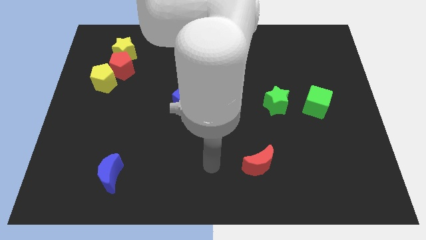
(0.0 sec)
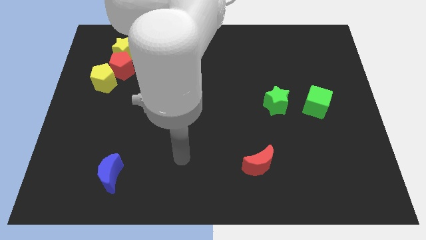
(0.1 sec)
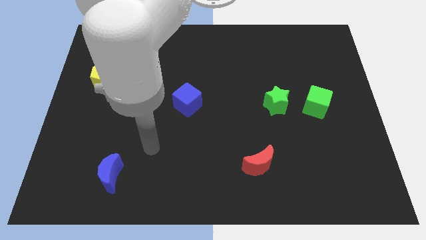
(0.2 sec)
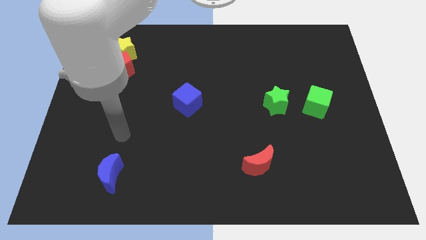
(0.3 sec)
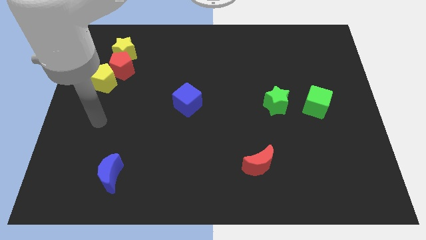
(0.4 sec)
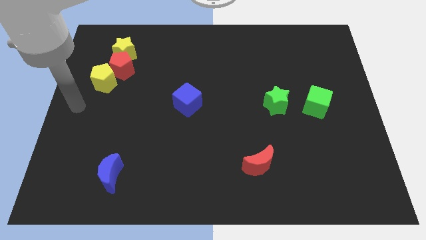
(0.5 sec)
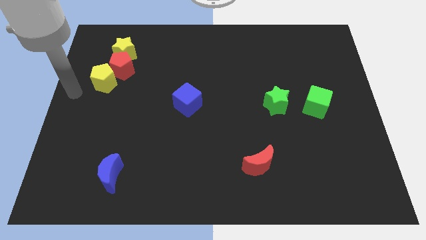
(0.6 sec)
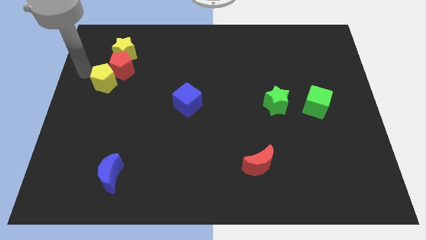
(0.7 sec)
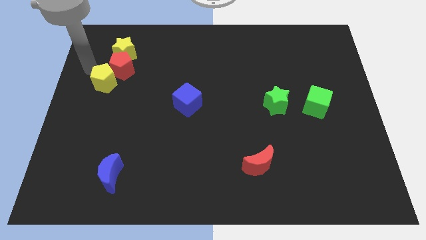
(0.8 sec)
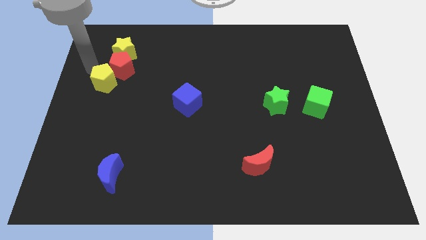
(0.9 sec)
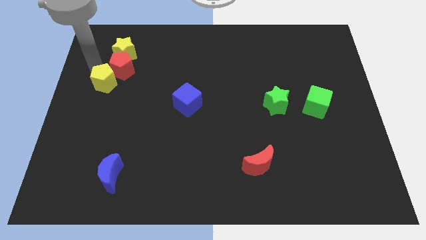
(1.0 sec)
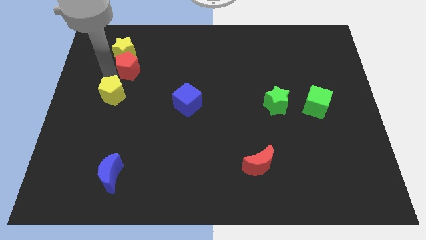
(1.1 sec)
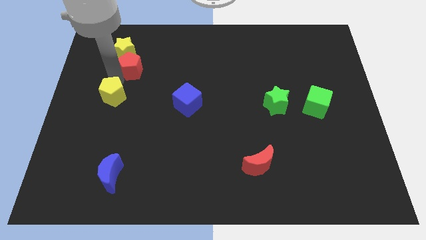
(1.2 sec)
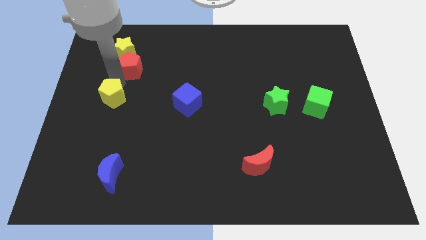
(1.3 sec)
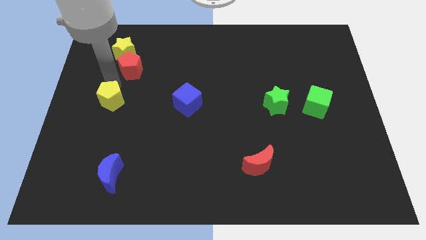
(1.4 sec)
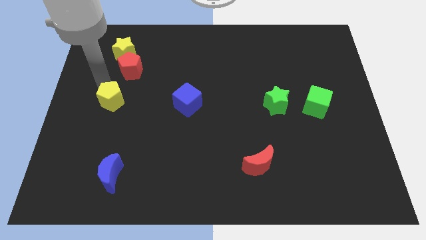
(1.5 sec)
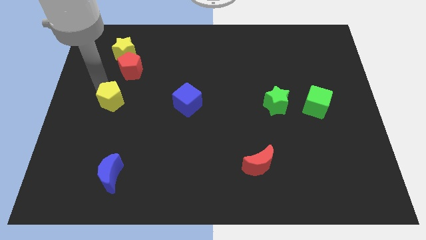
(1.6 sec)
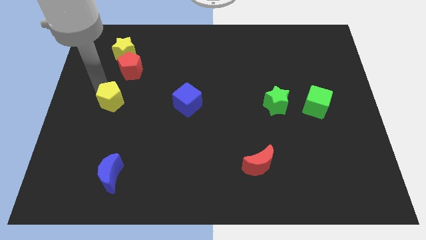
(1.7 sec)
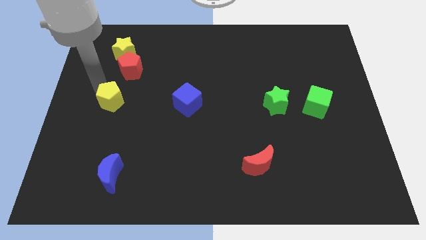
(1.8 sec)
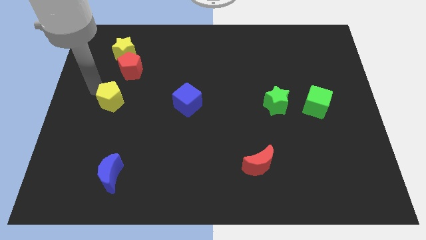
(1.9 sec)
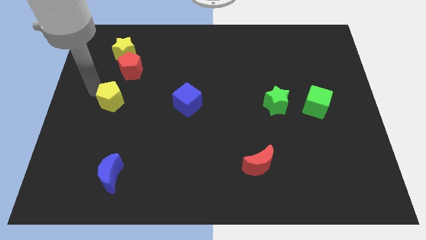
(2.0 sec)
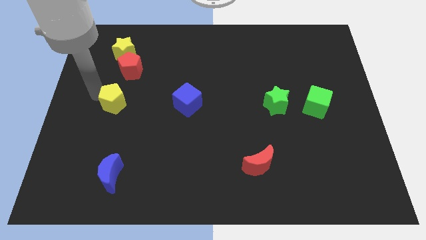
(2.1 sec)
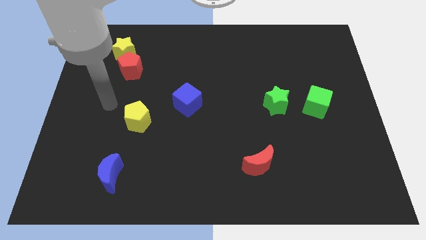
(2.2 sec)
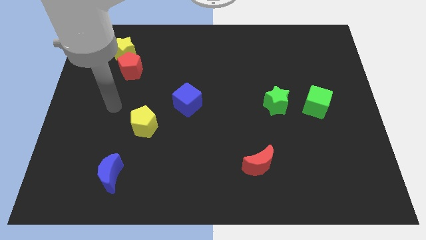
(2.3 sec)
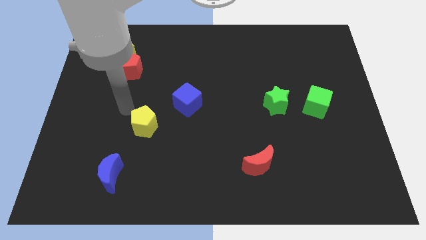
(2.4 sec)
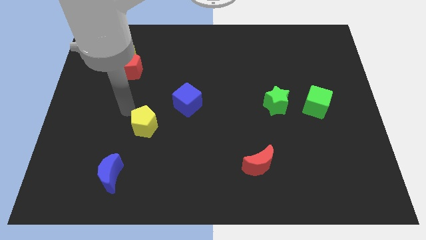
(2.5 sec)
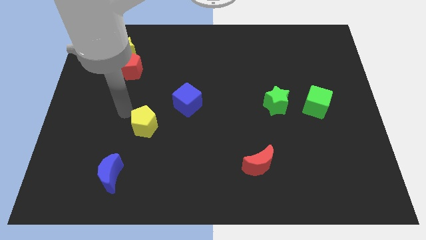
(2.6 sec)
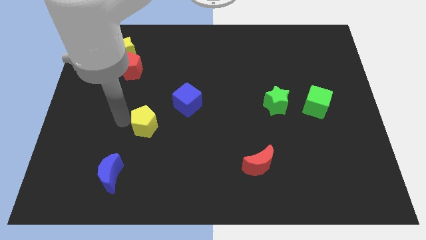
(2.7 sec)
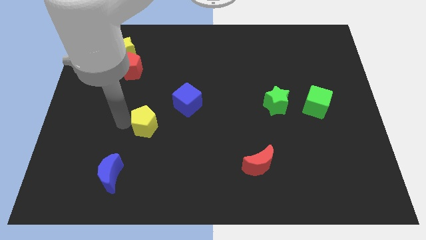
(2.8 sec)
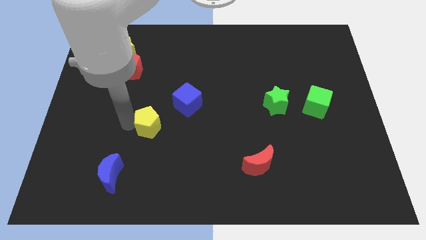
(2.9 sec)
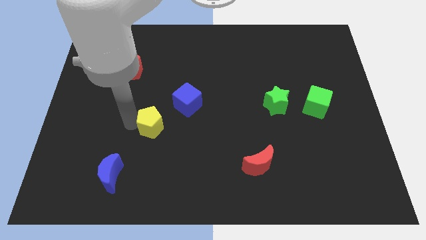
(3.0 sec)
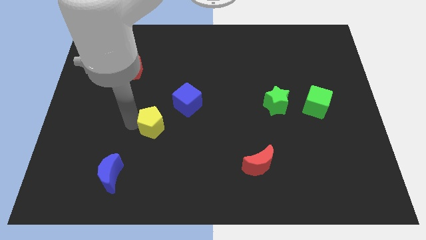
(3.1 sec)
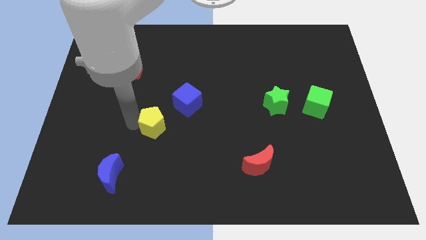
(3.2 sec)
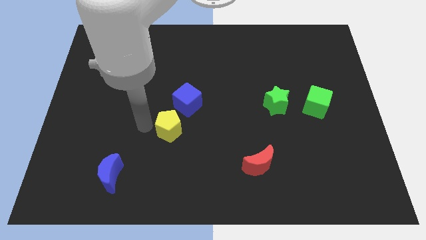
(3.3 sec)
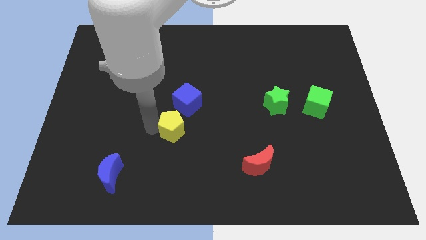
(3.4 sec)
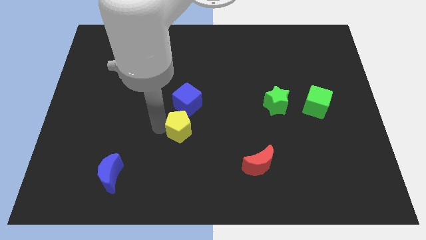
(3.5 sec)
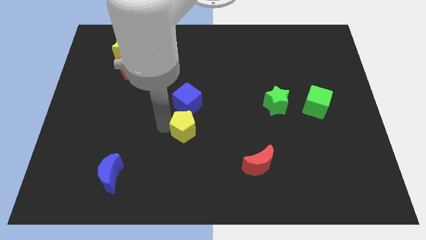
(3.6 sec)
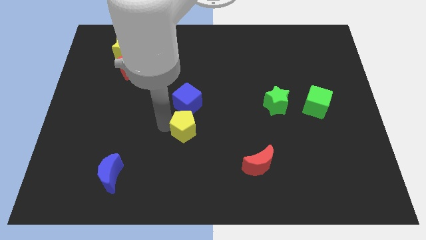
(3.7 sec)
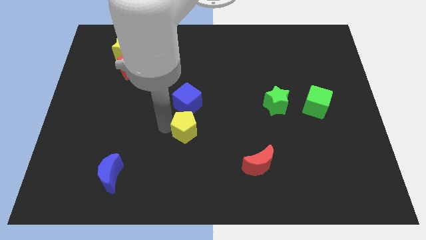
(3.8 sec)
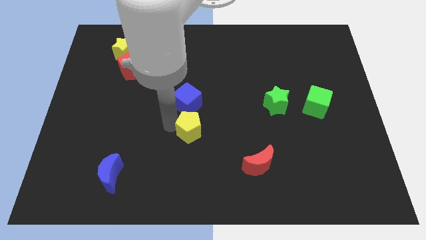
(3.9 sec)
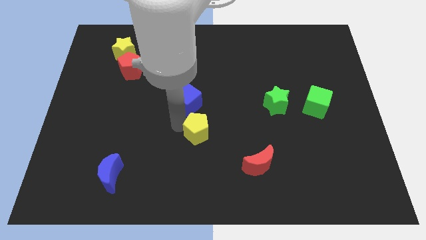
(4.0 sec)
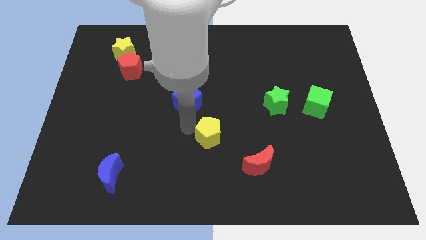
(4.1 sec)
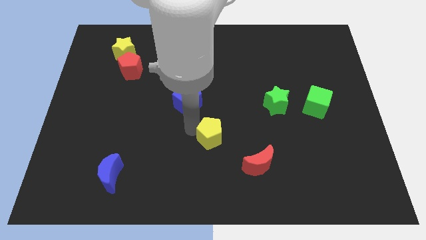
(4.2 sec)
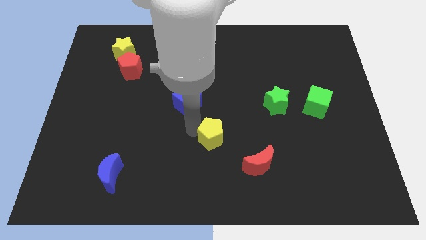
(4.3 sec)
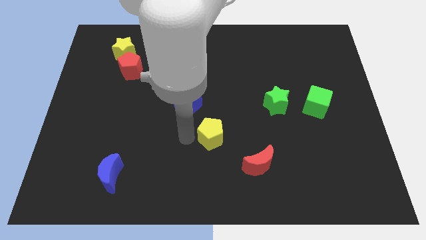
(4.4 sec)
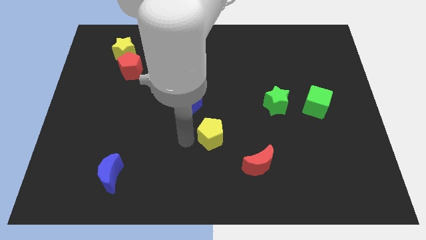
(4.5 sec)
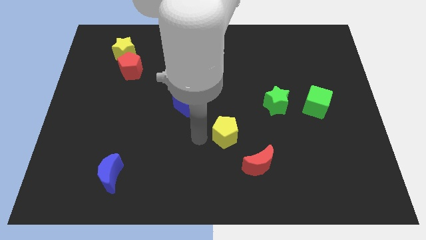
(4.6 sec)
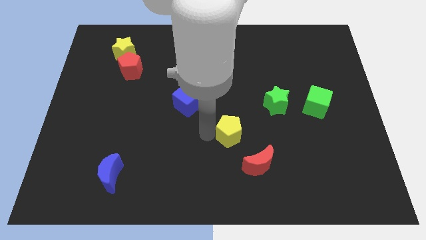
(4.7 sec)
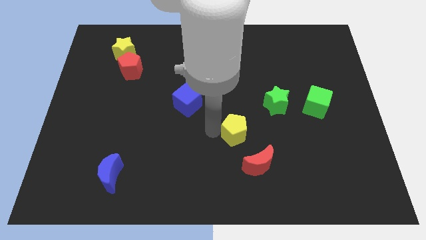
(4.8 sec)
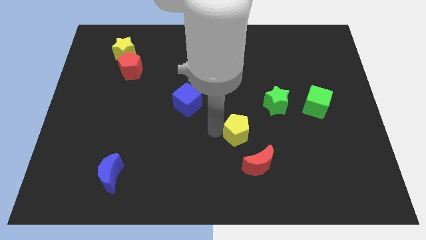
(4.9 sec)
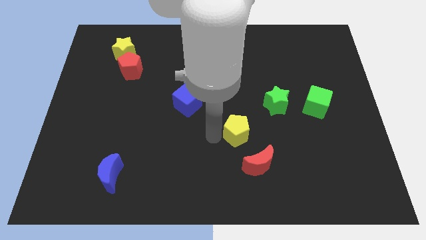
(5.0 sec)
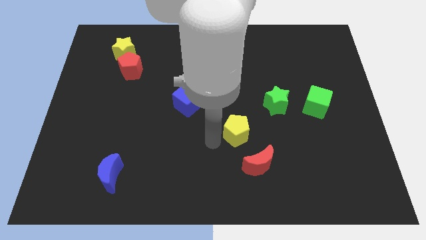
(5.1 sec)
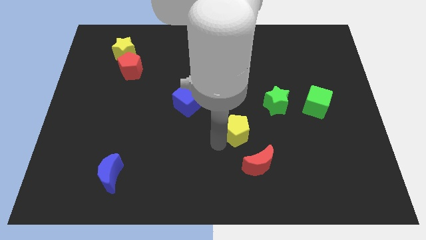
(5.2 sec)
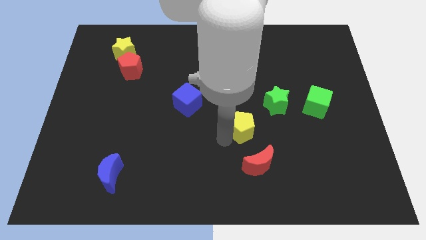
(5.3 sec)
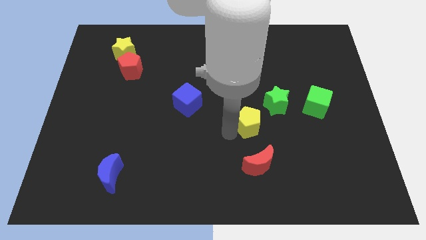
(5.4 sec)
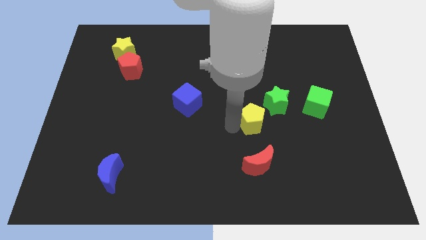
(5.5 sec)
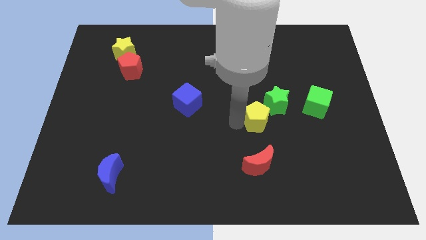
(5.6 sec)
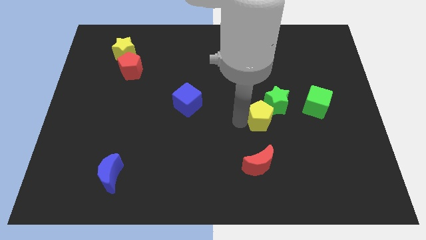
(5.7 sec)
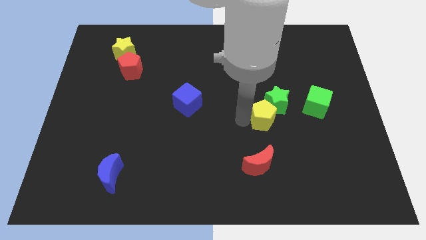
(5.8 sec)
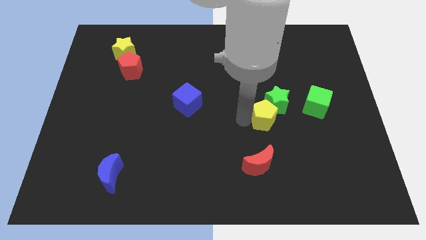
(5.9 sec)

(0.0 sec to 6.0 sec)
slide the yellow pentagon to the green star

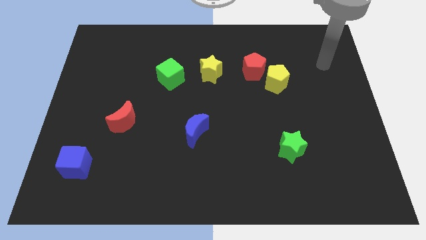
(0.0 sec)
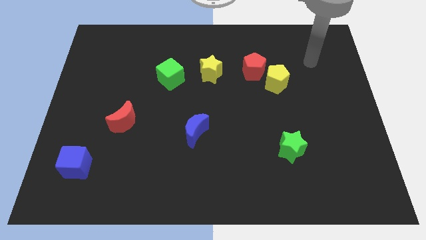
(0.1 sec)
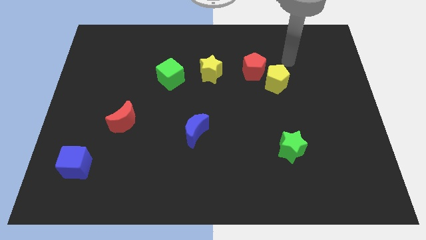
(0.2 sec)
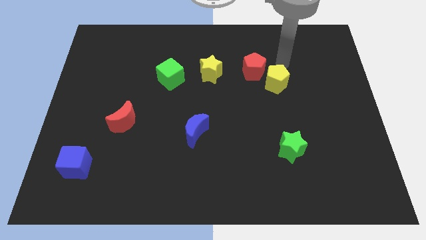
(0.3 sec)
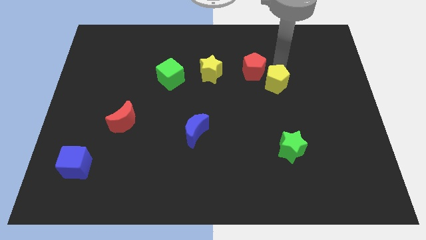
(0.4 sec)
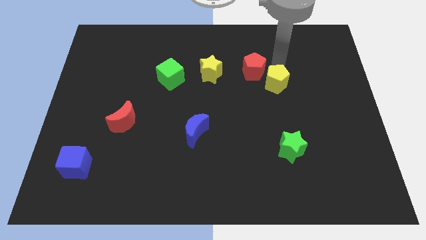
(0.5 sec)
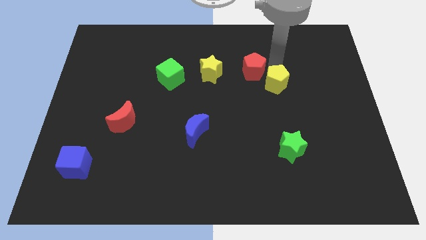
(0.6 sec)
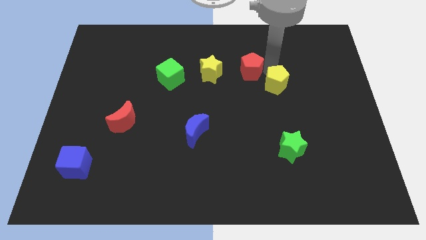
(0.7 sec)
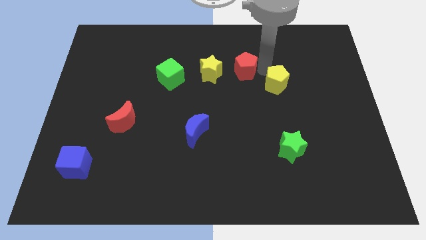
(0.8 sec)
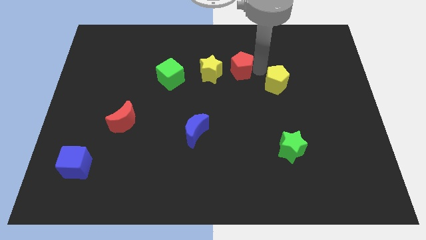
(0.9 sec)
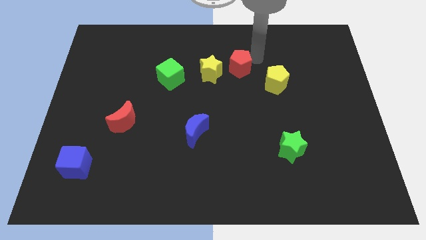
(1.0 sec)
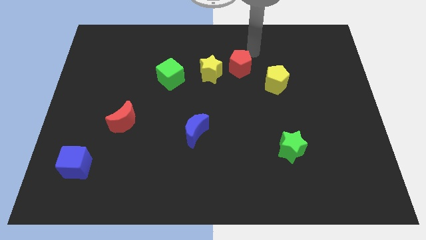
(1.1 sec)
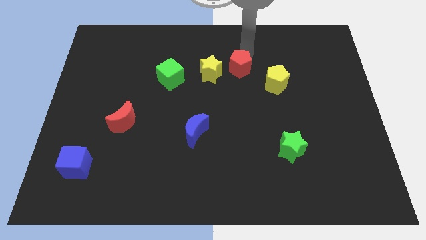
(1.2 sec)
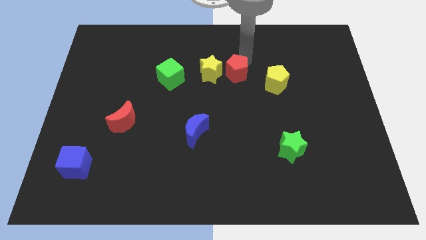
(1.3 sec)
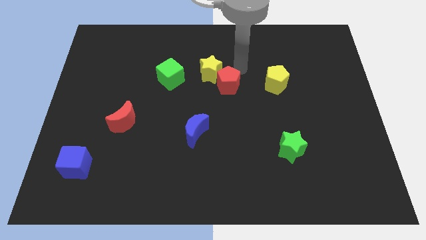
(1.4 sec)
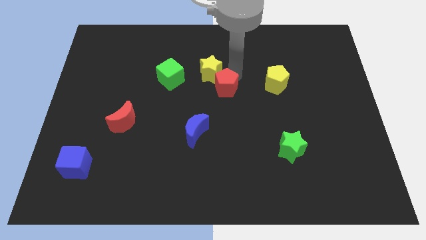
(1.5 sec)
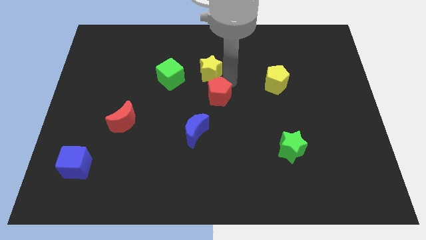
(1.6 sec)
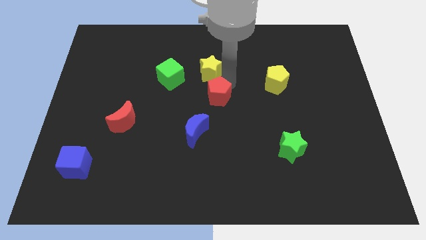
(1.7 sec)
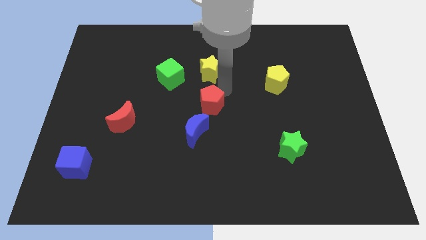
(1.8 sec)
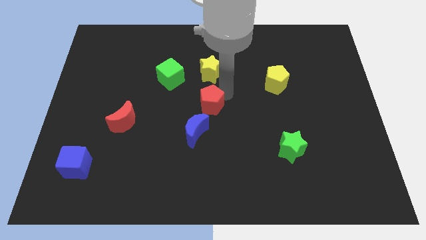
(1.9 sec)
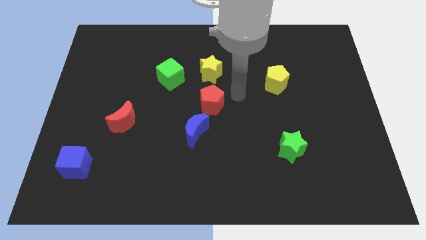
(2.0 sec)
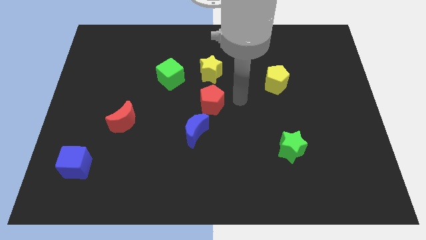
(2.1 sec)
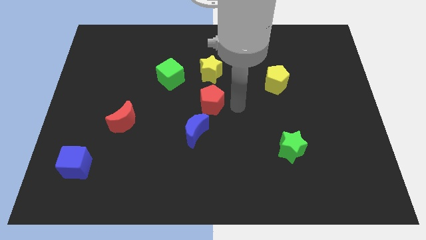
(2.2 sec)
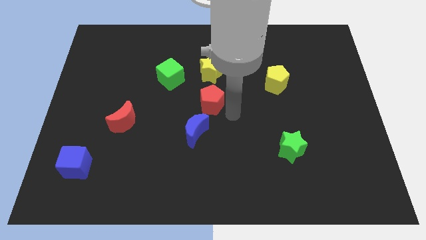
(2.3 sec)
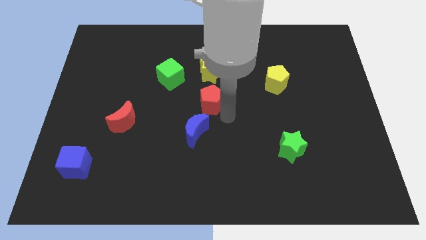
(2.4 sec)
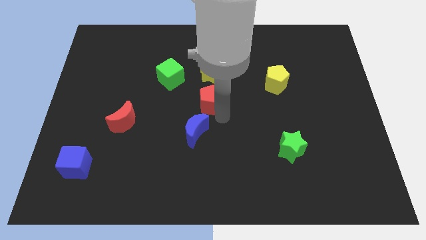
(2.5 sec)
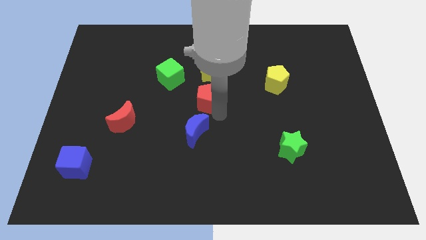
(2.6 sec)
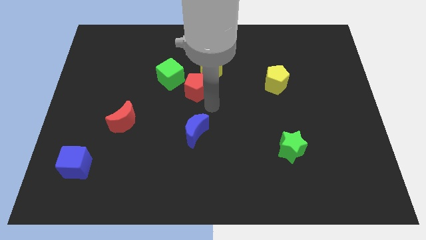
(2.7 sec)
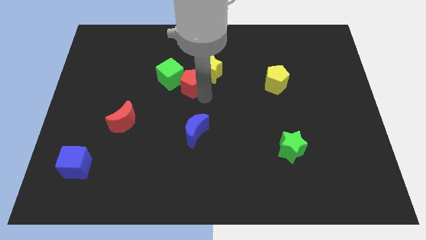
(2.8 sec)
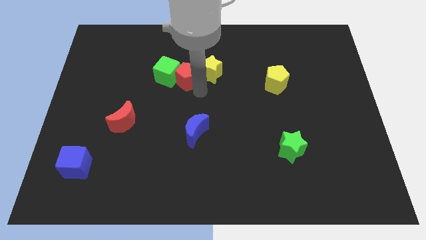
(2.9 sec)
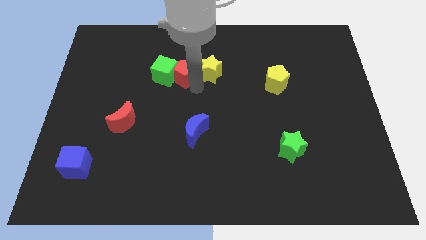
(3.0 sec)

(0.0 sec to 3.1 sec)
push the red pentagon close to the green cube
